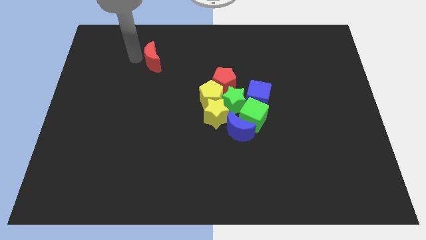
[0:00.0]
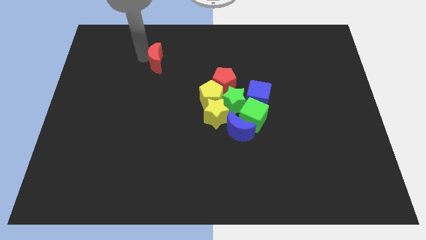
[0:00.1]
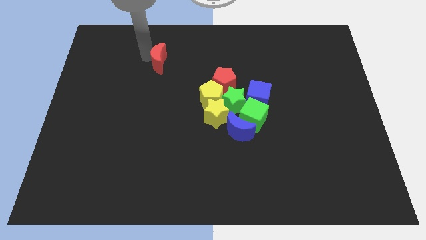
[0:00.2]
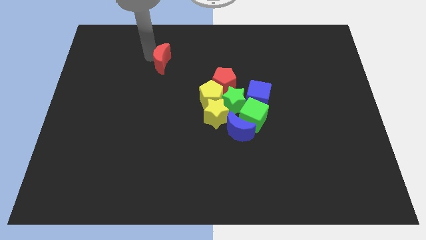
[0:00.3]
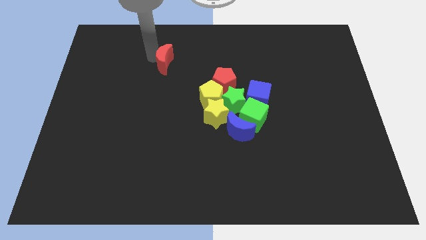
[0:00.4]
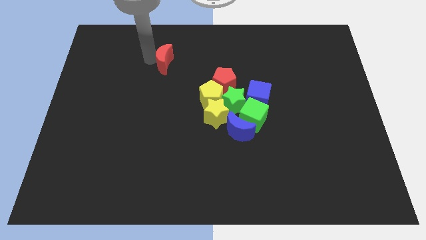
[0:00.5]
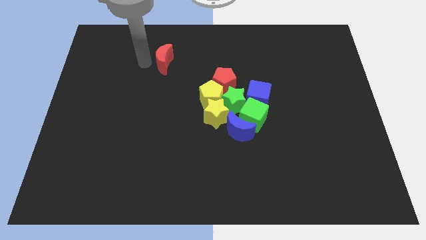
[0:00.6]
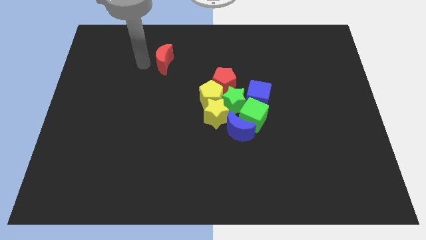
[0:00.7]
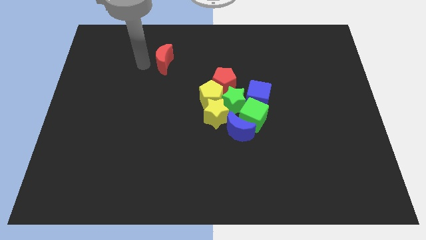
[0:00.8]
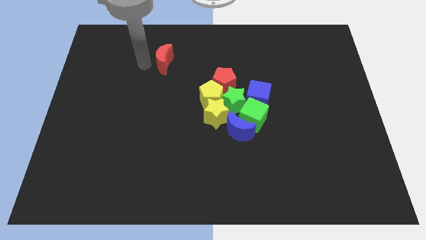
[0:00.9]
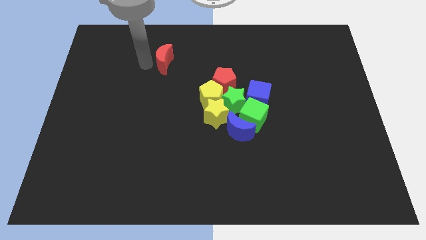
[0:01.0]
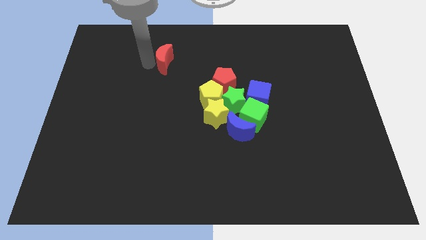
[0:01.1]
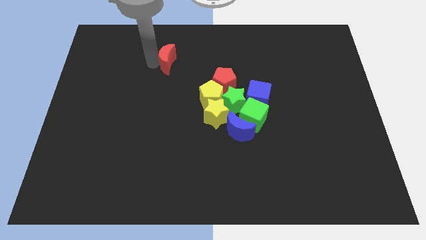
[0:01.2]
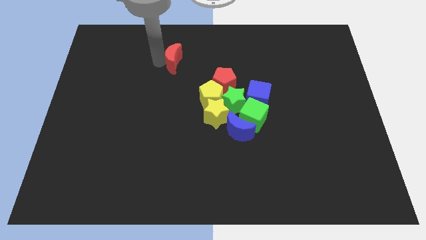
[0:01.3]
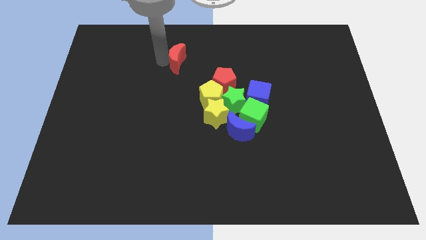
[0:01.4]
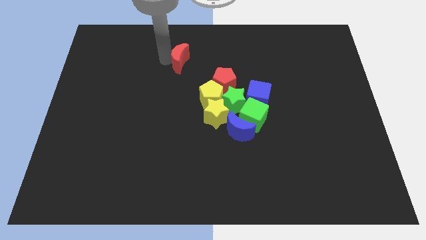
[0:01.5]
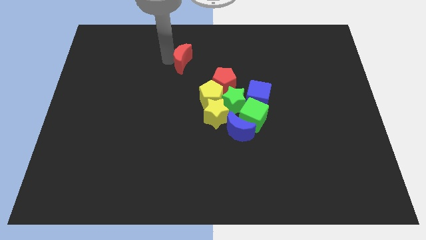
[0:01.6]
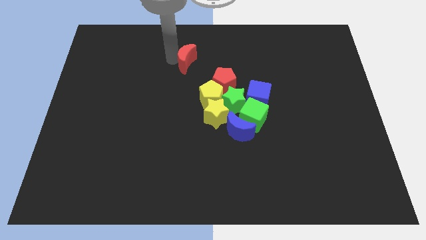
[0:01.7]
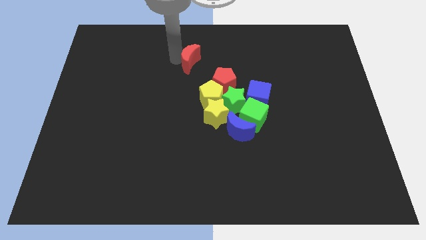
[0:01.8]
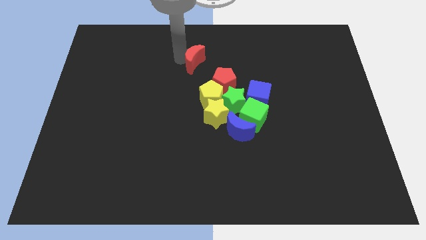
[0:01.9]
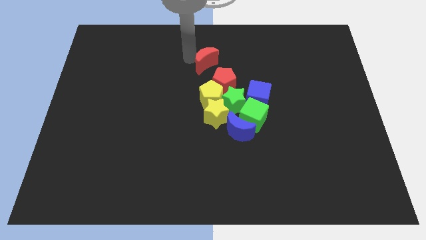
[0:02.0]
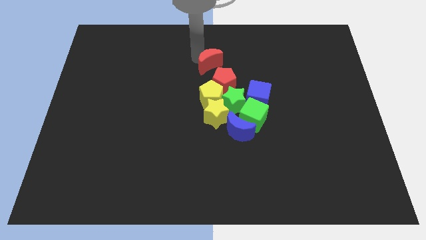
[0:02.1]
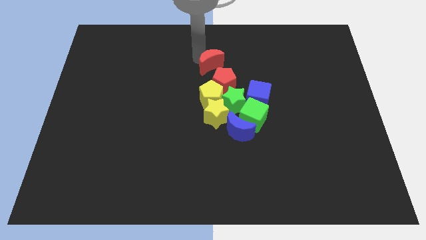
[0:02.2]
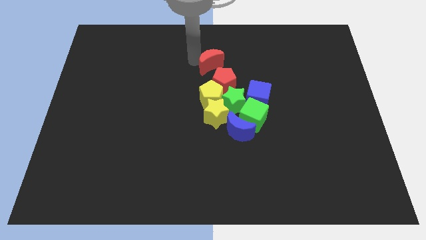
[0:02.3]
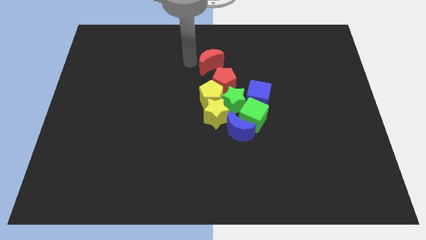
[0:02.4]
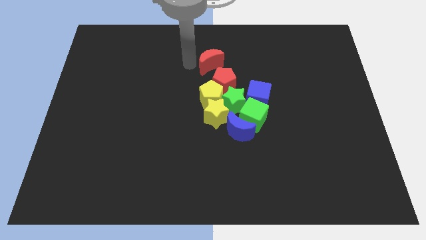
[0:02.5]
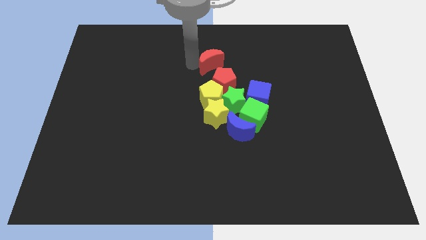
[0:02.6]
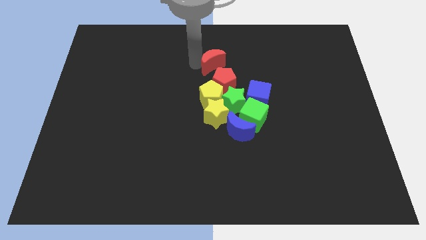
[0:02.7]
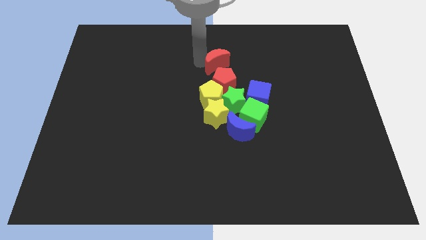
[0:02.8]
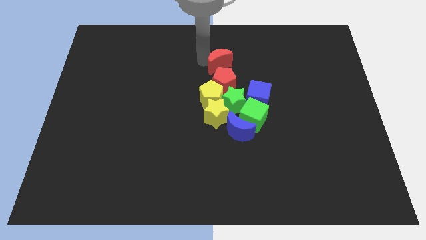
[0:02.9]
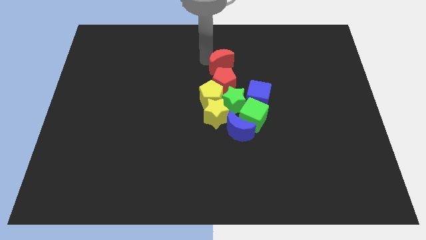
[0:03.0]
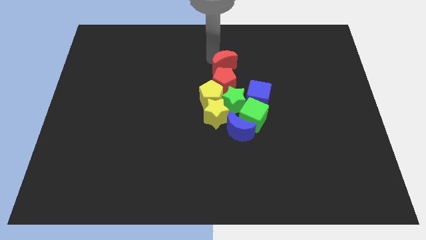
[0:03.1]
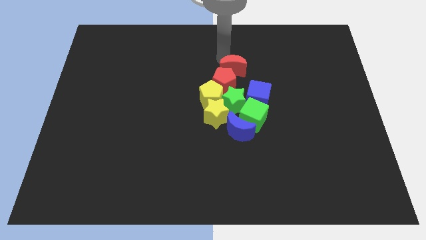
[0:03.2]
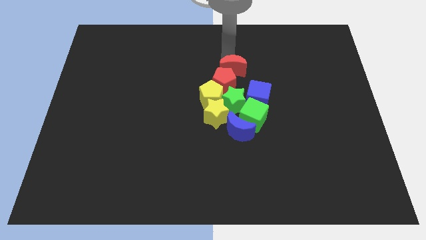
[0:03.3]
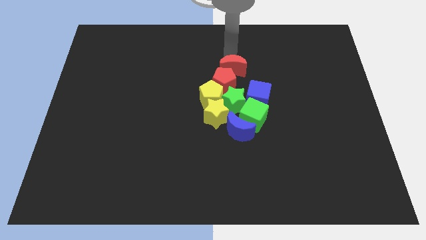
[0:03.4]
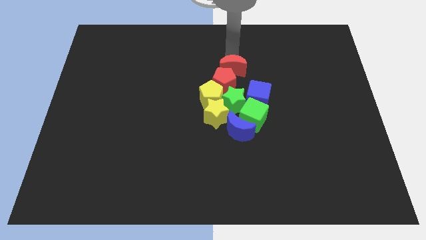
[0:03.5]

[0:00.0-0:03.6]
place the red crescent above the red pentagon

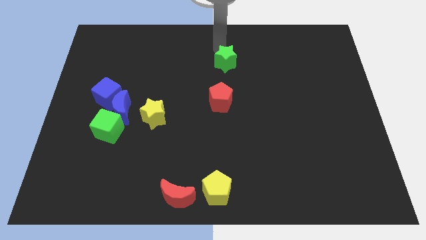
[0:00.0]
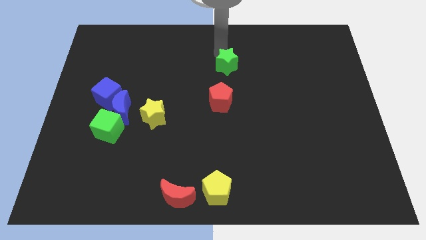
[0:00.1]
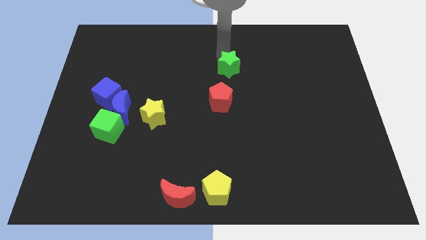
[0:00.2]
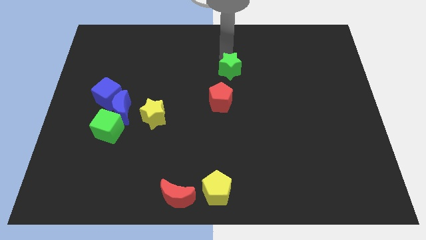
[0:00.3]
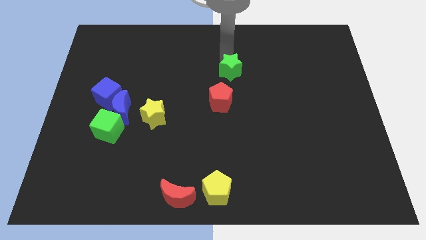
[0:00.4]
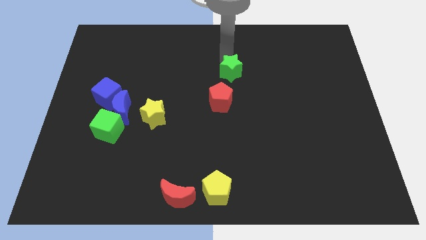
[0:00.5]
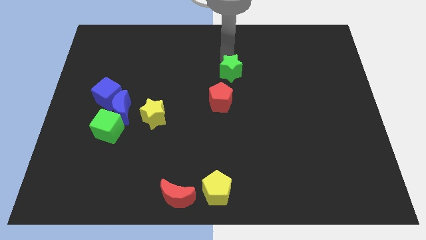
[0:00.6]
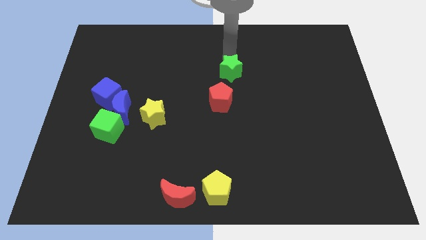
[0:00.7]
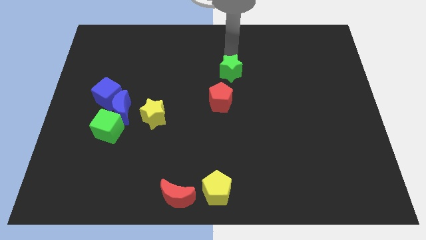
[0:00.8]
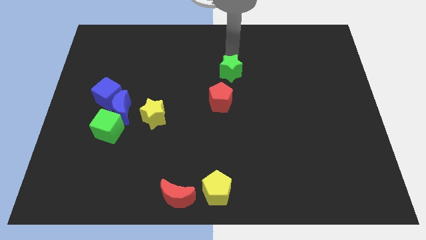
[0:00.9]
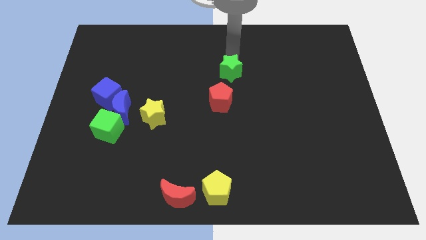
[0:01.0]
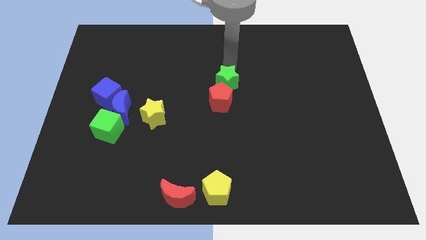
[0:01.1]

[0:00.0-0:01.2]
place the green star above the red pentagon

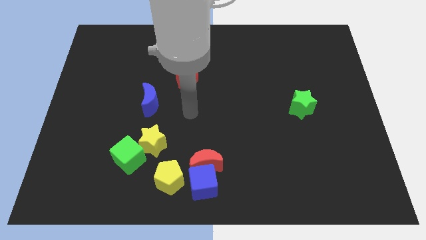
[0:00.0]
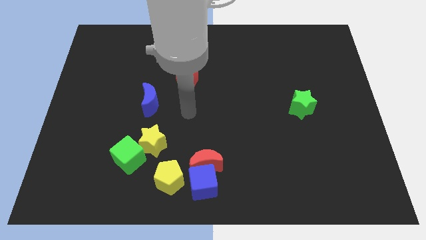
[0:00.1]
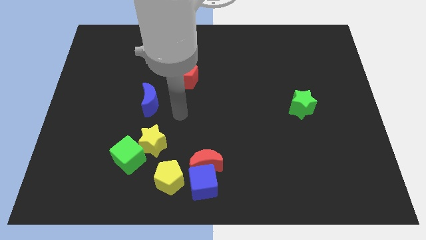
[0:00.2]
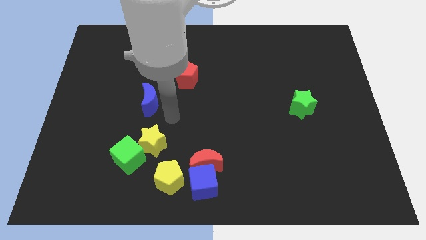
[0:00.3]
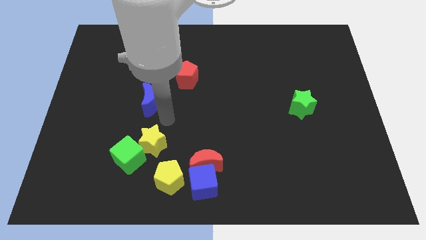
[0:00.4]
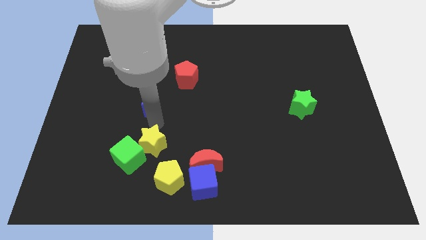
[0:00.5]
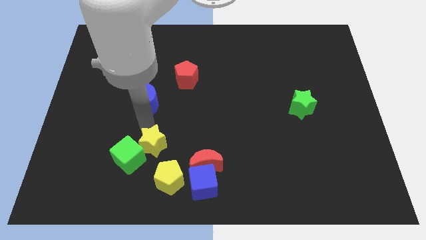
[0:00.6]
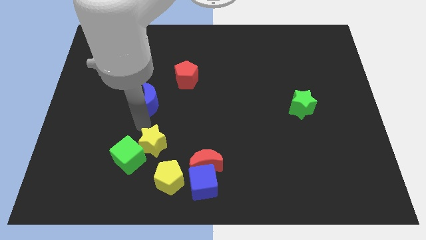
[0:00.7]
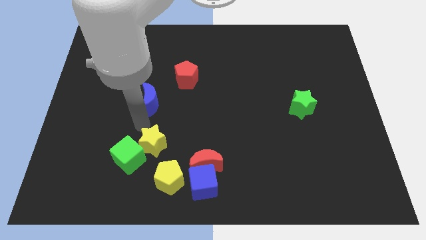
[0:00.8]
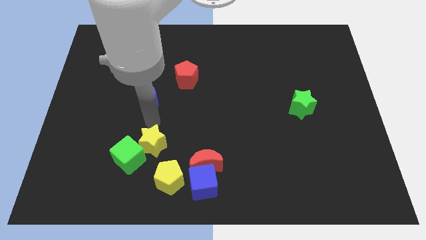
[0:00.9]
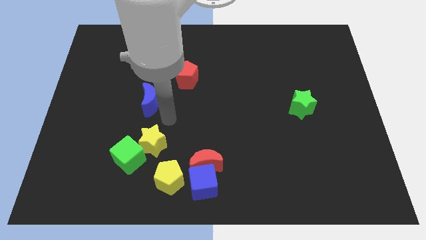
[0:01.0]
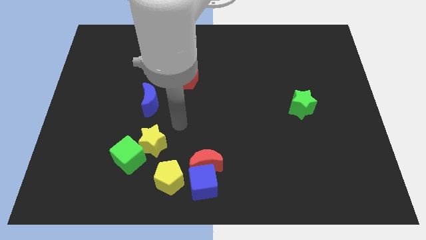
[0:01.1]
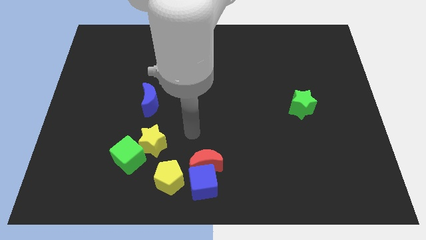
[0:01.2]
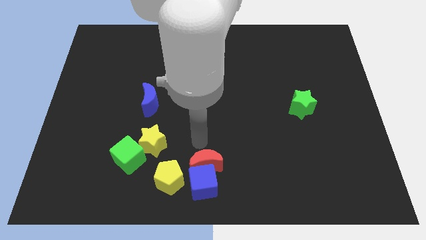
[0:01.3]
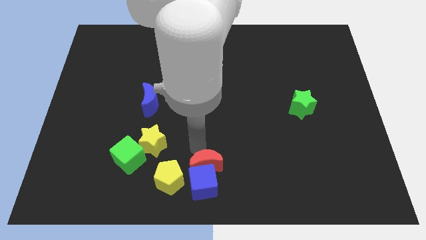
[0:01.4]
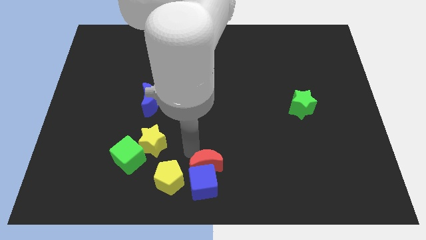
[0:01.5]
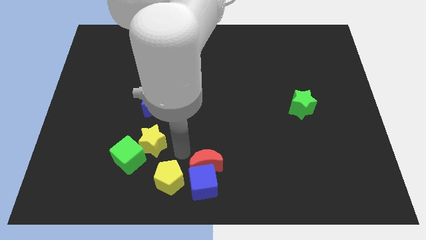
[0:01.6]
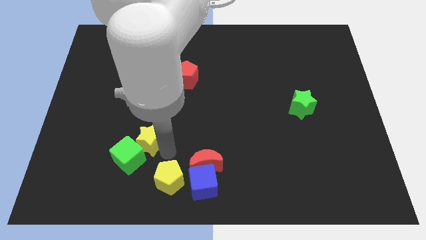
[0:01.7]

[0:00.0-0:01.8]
place your arm to the right of the yellow star

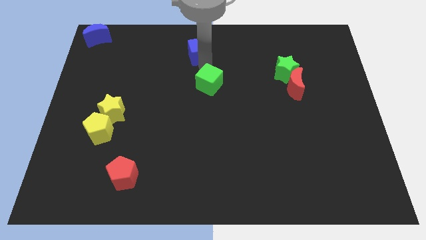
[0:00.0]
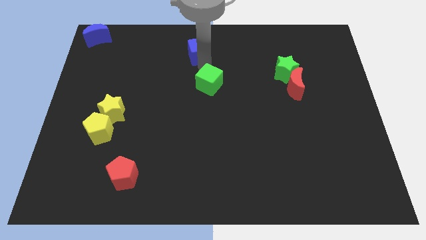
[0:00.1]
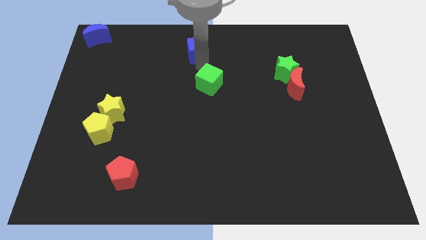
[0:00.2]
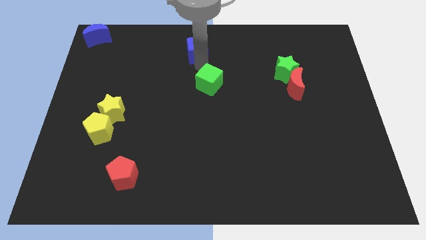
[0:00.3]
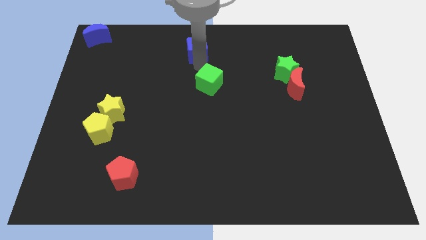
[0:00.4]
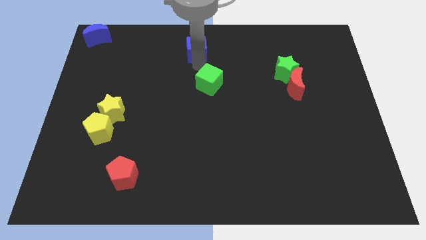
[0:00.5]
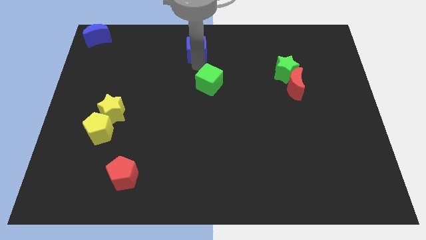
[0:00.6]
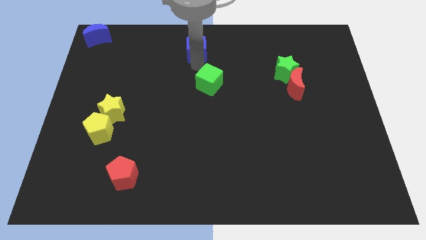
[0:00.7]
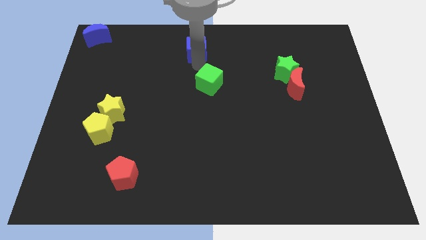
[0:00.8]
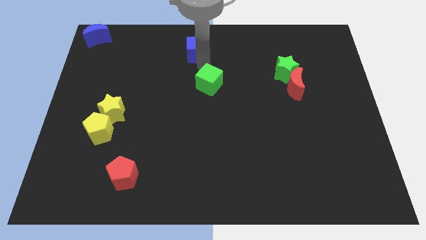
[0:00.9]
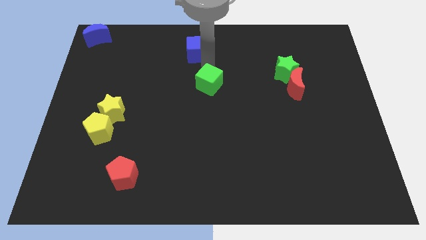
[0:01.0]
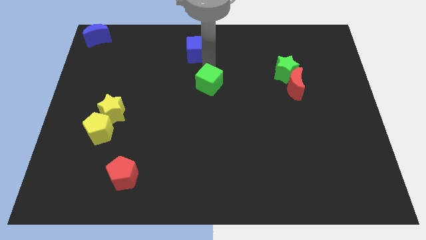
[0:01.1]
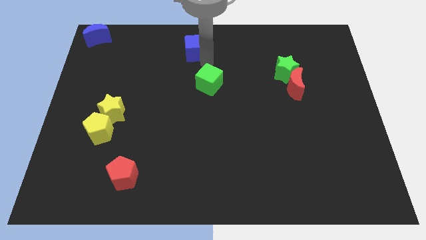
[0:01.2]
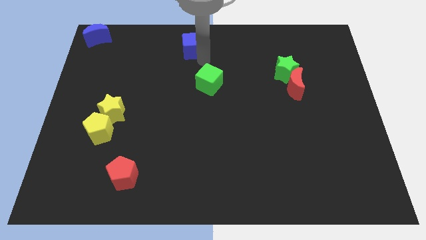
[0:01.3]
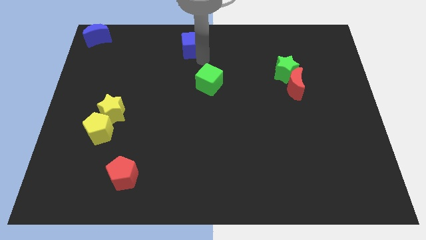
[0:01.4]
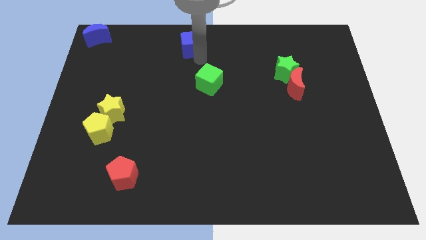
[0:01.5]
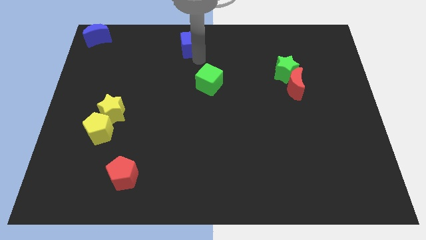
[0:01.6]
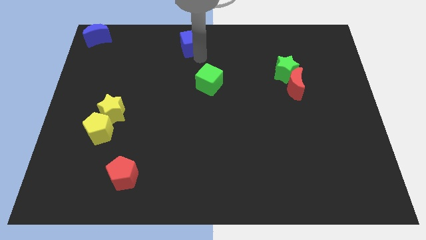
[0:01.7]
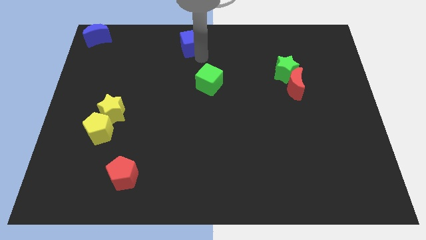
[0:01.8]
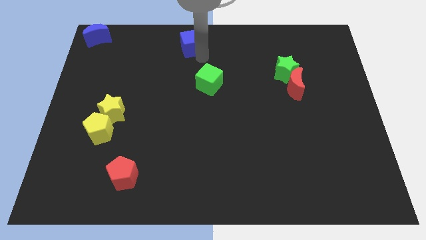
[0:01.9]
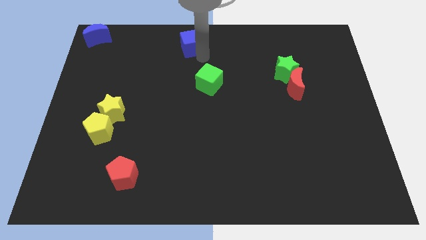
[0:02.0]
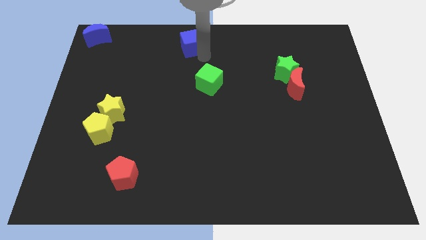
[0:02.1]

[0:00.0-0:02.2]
push the blue cube towards the top side of the board
